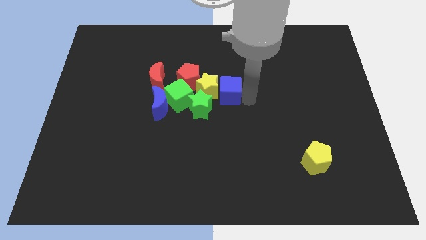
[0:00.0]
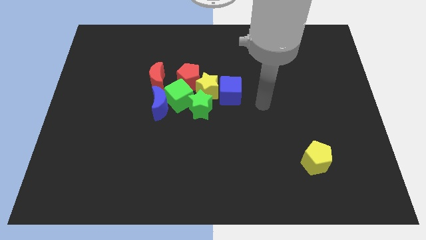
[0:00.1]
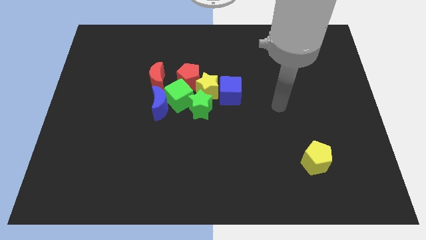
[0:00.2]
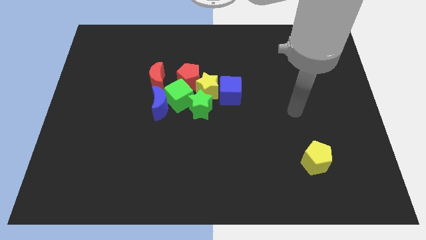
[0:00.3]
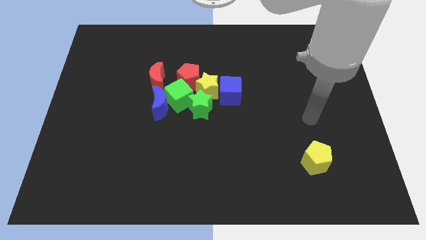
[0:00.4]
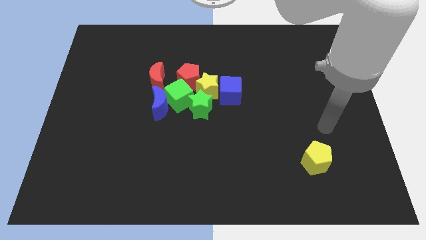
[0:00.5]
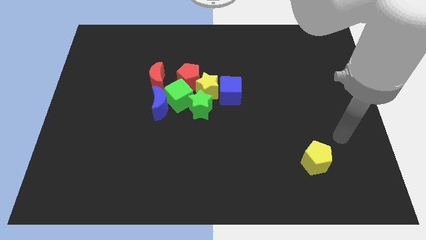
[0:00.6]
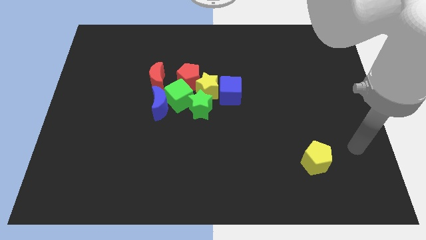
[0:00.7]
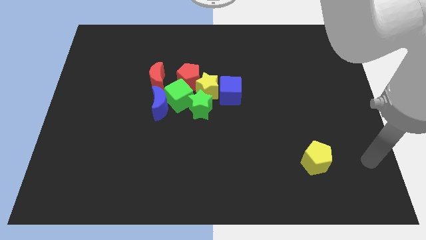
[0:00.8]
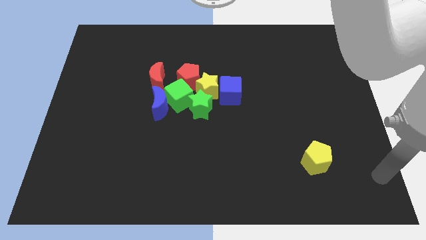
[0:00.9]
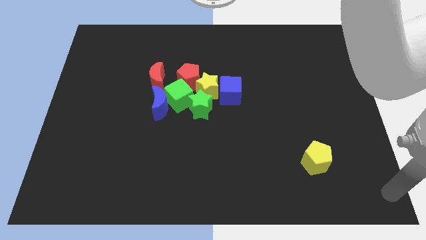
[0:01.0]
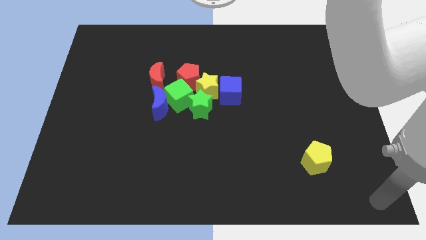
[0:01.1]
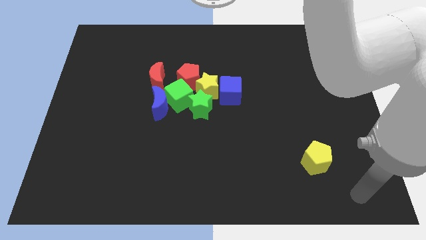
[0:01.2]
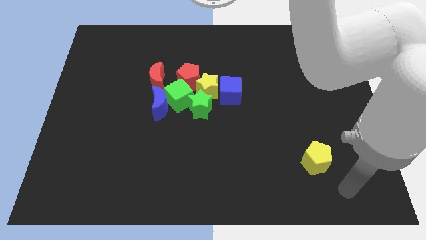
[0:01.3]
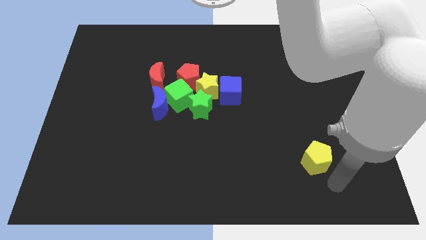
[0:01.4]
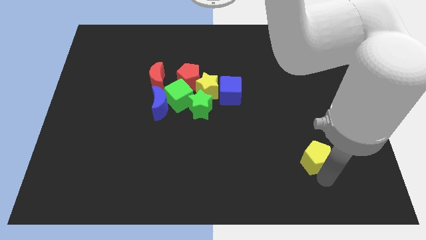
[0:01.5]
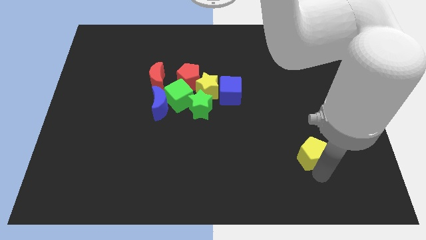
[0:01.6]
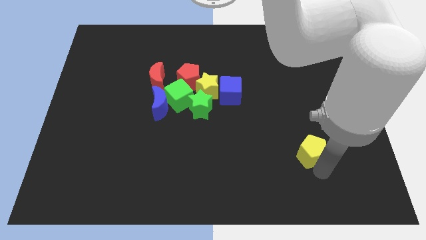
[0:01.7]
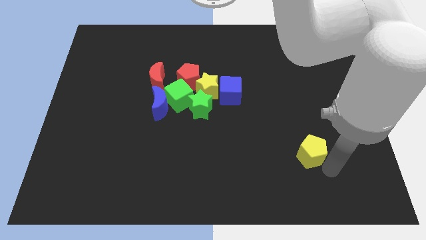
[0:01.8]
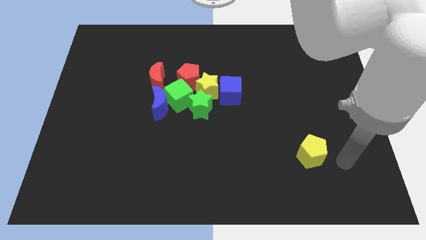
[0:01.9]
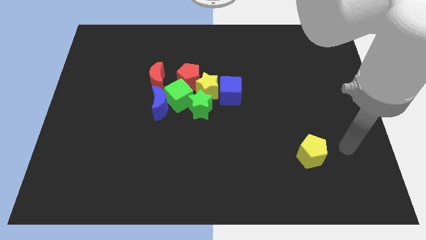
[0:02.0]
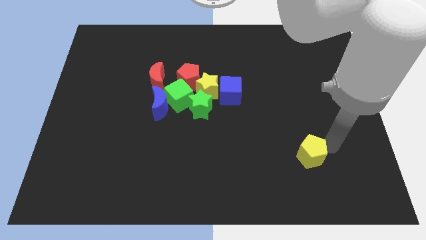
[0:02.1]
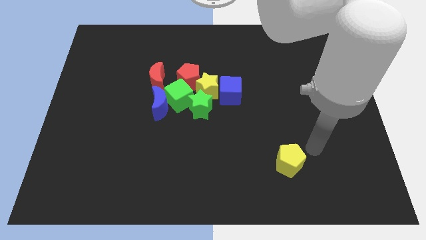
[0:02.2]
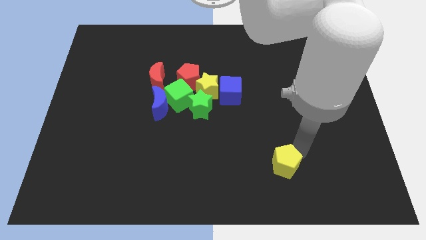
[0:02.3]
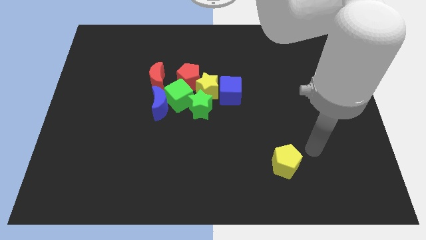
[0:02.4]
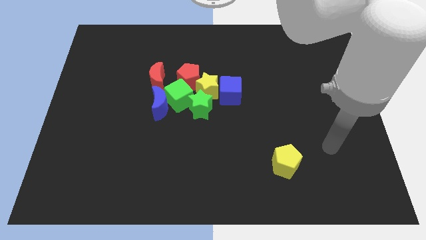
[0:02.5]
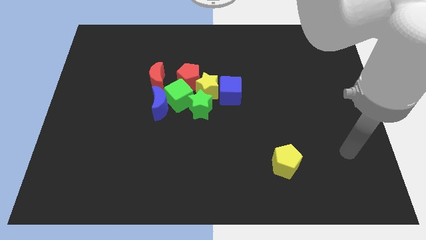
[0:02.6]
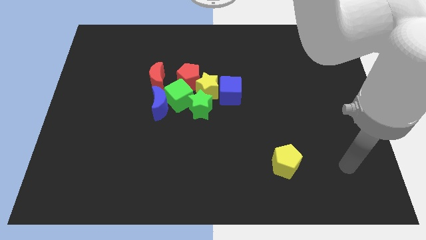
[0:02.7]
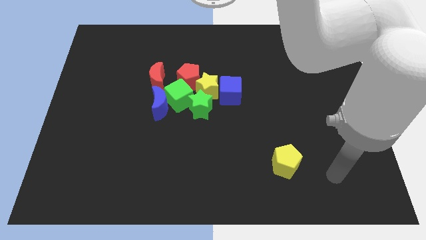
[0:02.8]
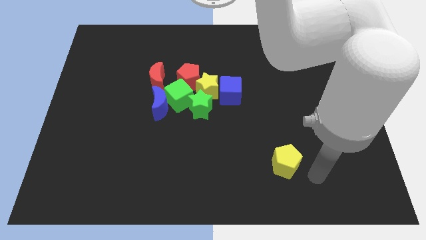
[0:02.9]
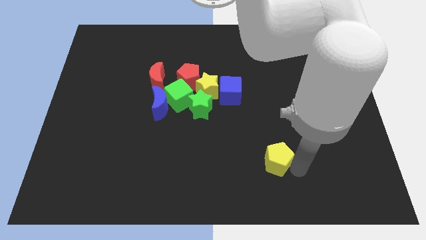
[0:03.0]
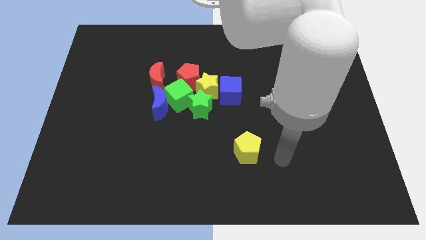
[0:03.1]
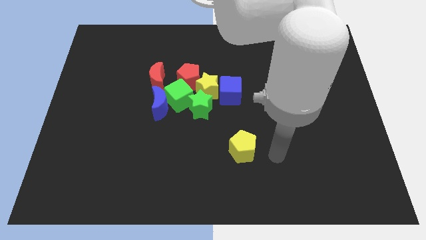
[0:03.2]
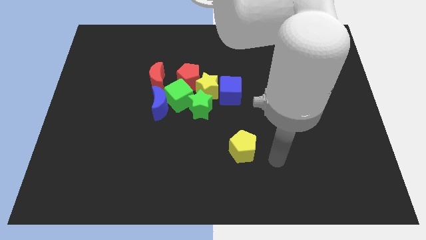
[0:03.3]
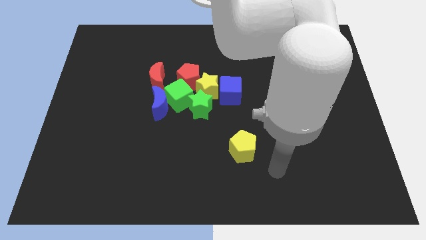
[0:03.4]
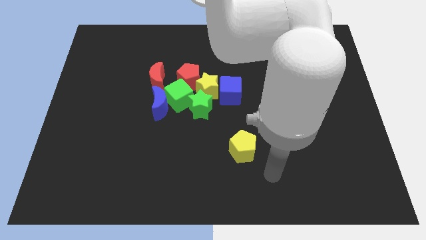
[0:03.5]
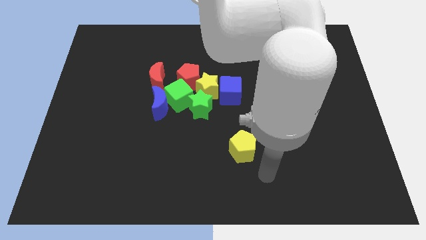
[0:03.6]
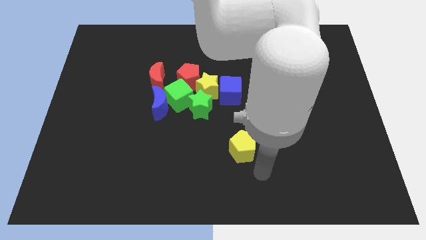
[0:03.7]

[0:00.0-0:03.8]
move the yellow pentagon towards the group of blocks

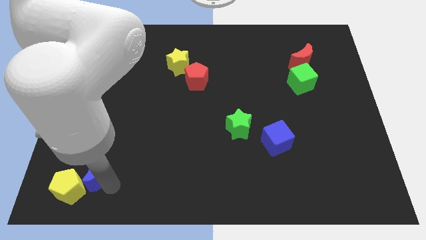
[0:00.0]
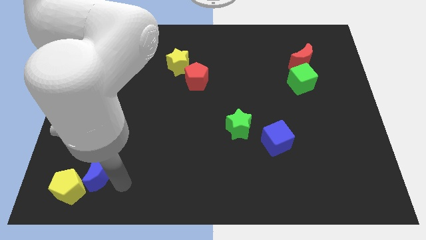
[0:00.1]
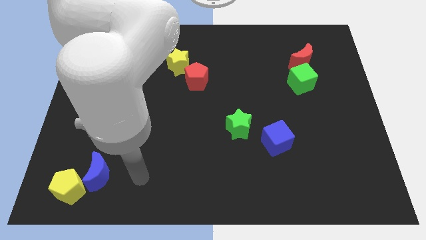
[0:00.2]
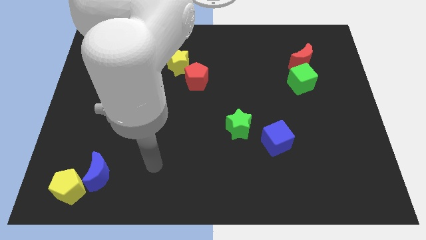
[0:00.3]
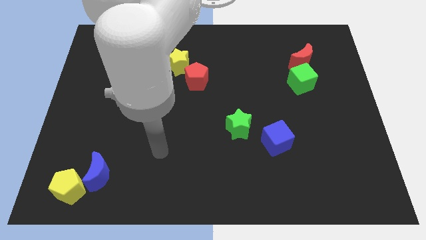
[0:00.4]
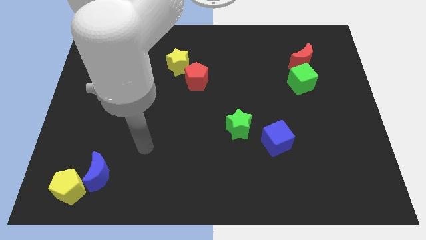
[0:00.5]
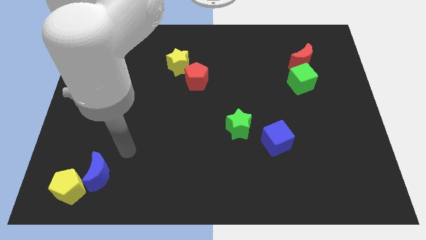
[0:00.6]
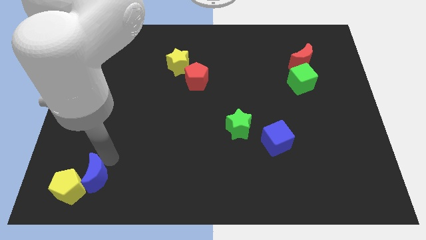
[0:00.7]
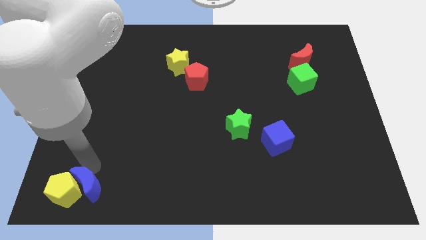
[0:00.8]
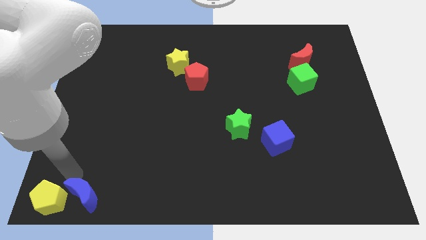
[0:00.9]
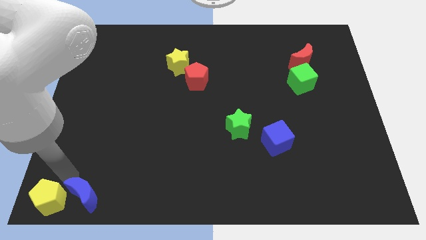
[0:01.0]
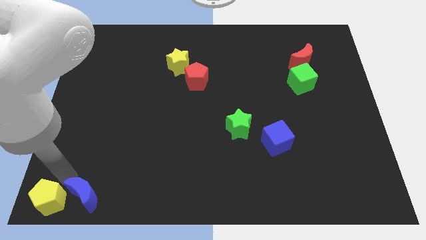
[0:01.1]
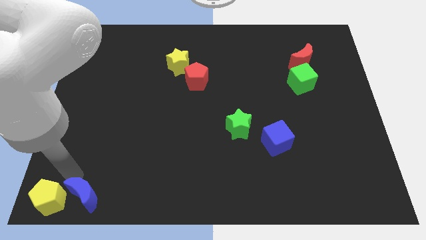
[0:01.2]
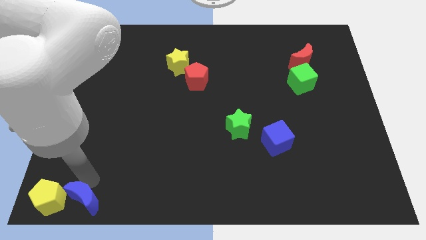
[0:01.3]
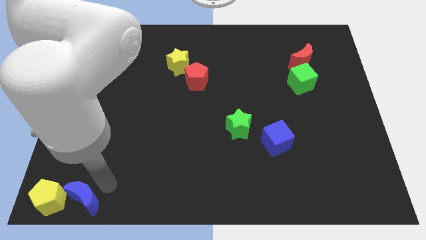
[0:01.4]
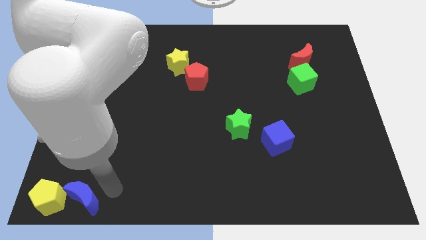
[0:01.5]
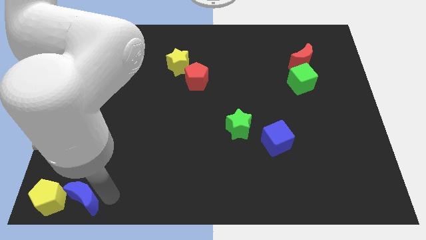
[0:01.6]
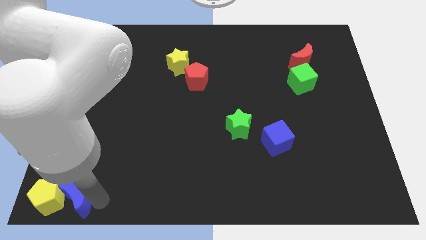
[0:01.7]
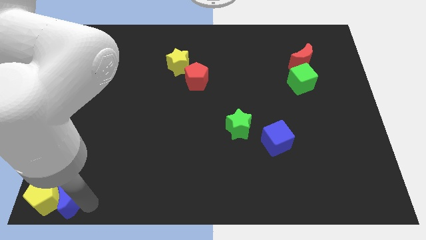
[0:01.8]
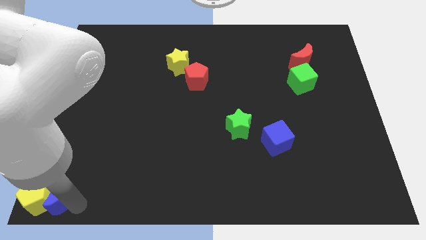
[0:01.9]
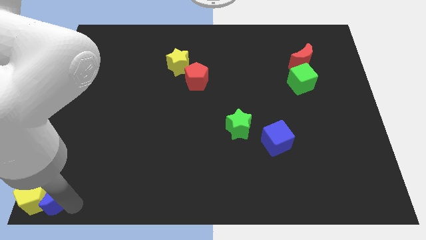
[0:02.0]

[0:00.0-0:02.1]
move blue moon along with yellow pentagon to the bottom left

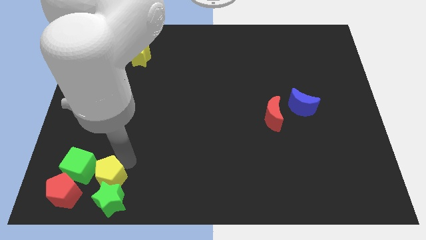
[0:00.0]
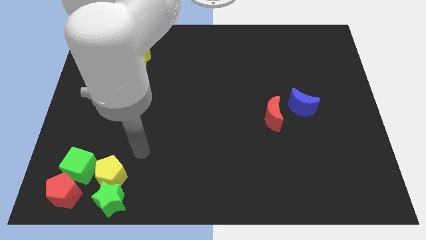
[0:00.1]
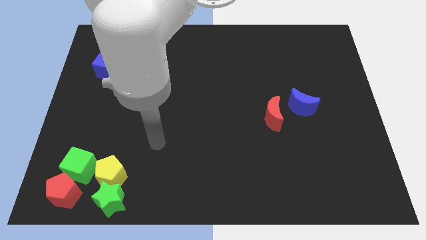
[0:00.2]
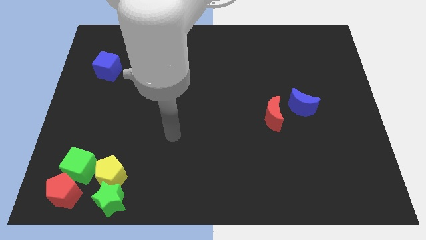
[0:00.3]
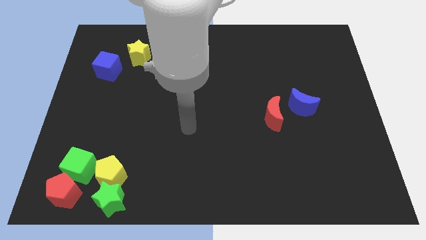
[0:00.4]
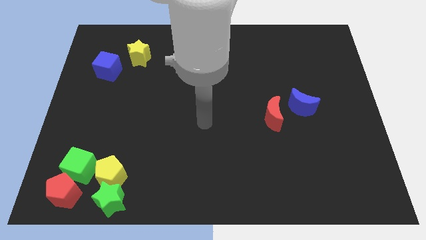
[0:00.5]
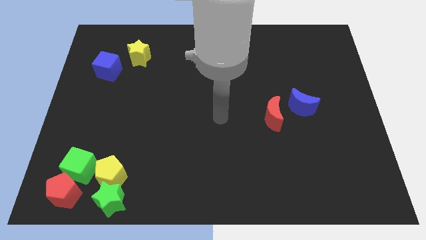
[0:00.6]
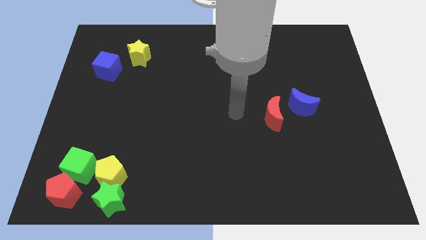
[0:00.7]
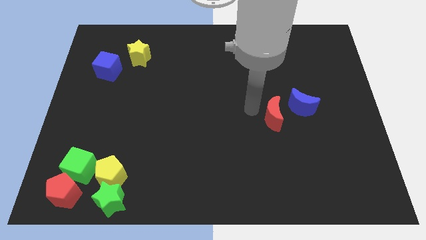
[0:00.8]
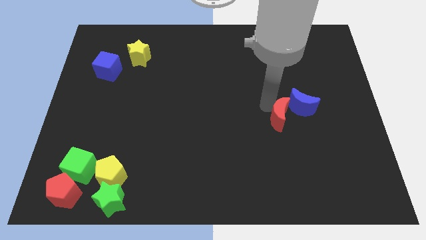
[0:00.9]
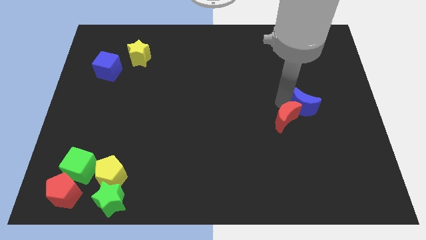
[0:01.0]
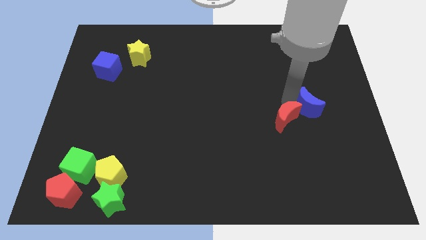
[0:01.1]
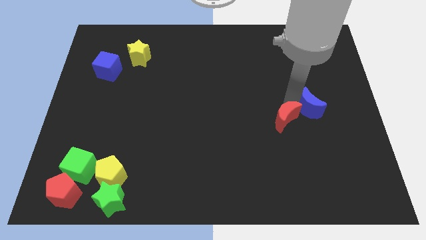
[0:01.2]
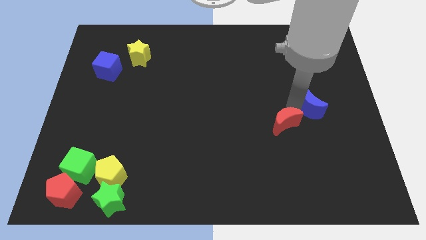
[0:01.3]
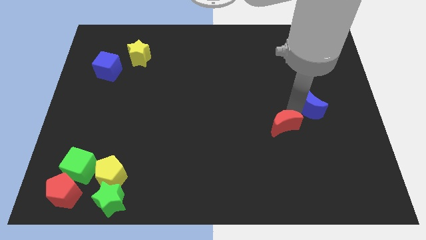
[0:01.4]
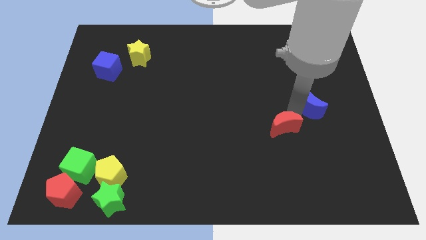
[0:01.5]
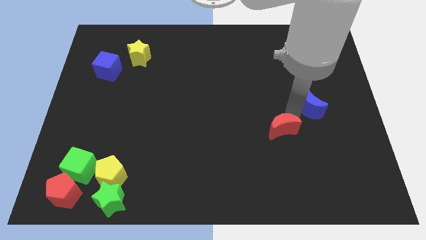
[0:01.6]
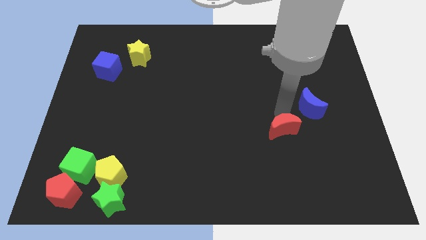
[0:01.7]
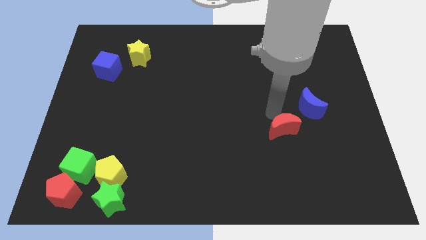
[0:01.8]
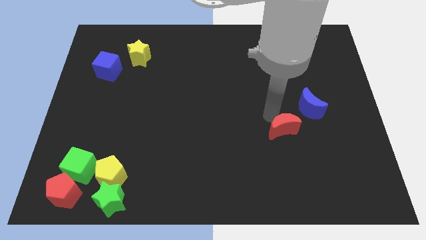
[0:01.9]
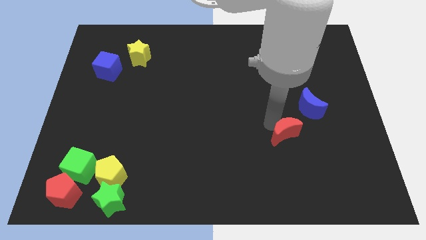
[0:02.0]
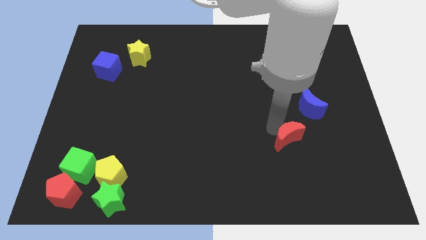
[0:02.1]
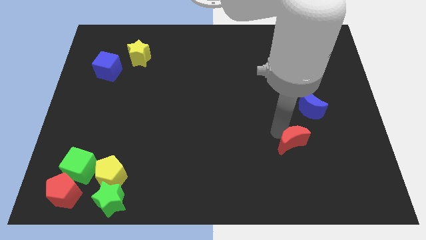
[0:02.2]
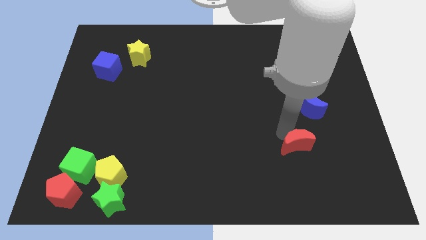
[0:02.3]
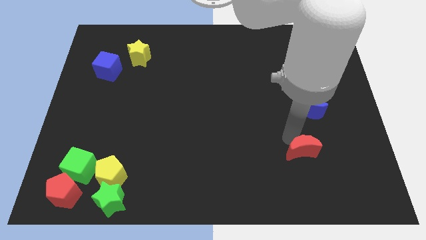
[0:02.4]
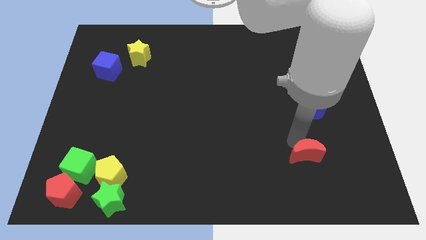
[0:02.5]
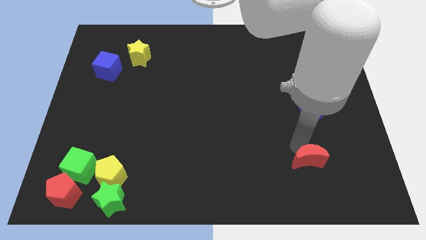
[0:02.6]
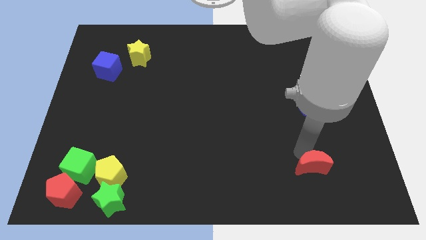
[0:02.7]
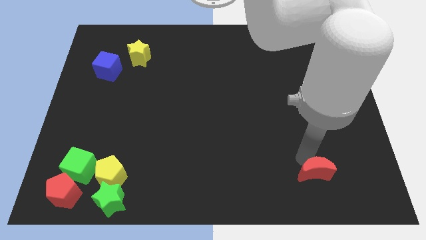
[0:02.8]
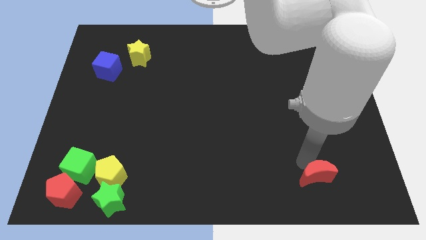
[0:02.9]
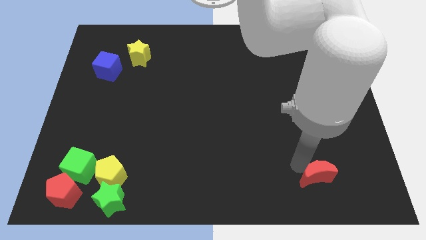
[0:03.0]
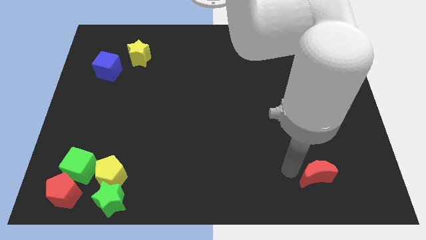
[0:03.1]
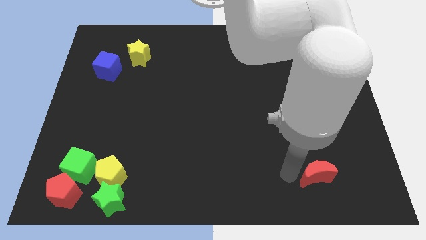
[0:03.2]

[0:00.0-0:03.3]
move the red crescent to the bottom of the blue crescent
